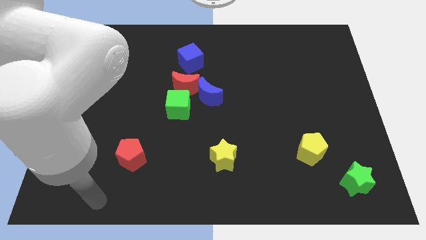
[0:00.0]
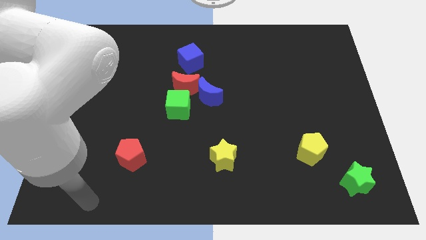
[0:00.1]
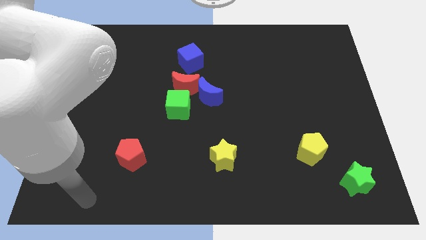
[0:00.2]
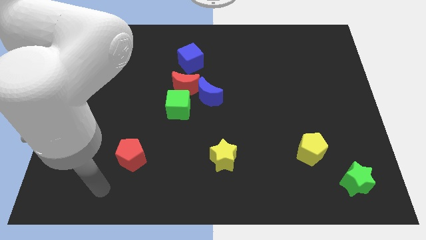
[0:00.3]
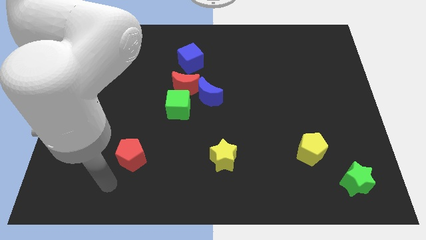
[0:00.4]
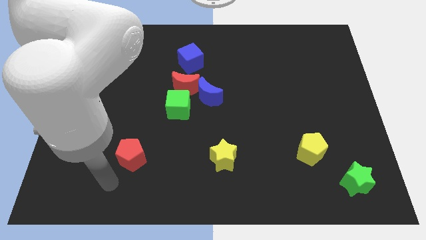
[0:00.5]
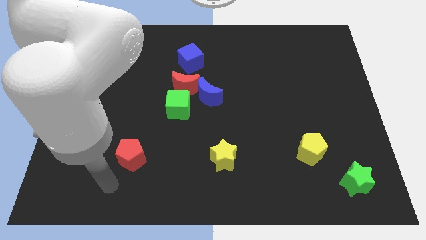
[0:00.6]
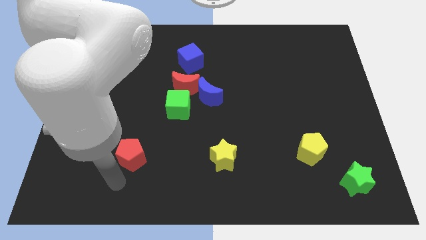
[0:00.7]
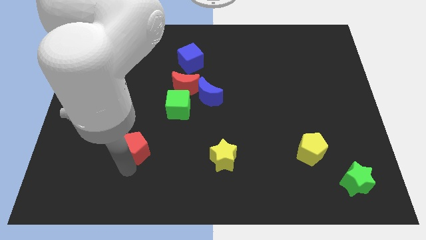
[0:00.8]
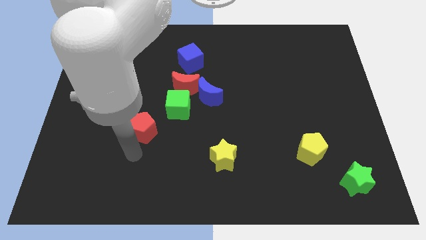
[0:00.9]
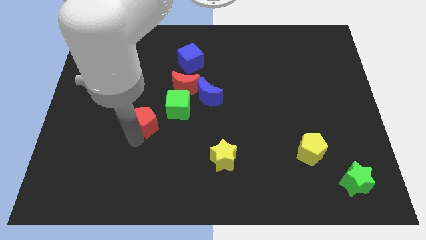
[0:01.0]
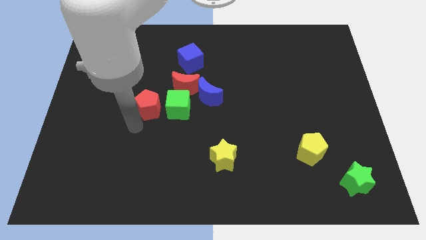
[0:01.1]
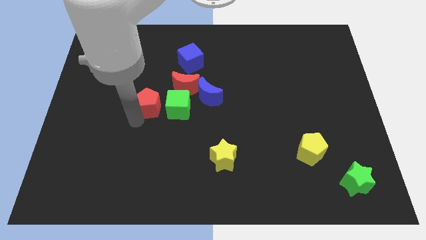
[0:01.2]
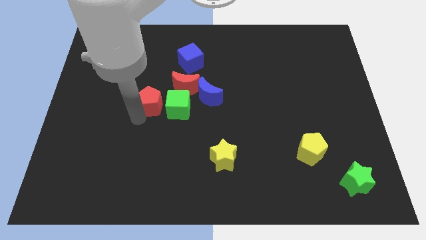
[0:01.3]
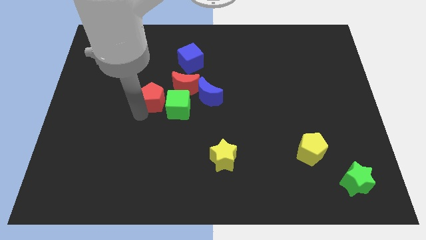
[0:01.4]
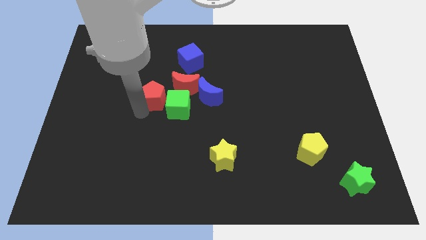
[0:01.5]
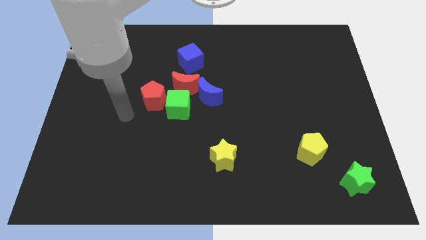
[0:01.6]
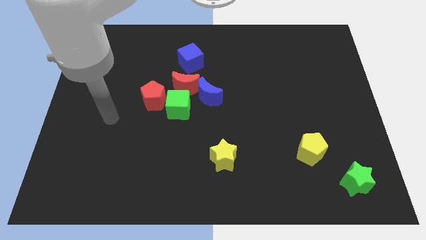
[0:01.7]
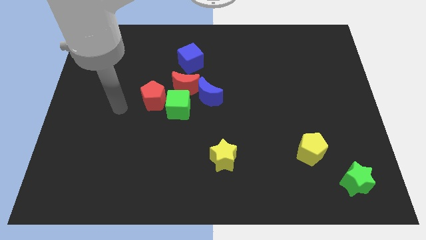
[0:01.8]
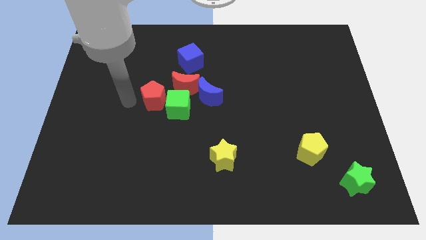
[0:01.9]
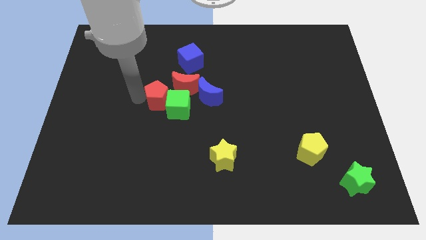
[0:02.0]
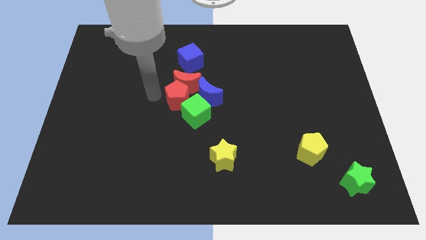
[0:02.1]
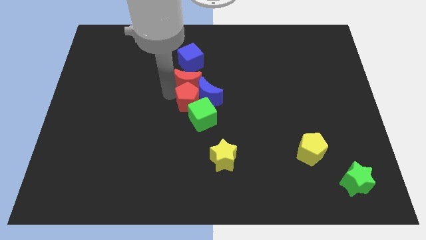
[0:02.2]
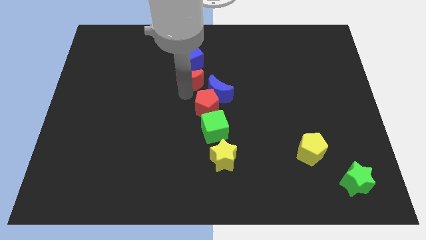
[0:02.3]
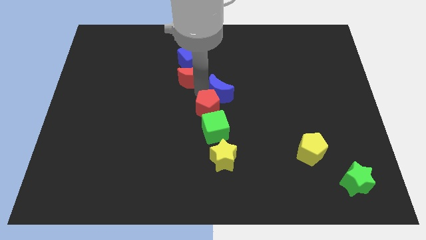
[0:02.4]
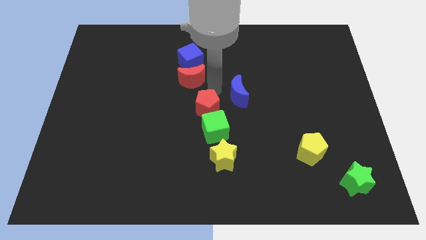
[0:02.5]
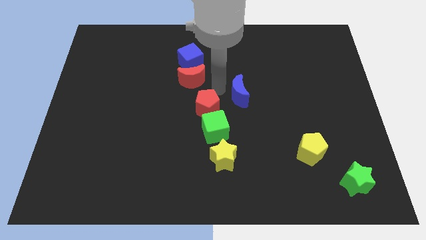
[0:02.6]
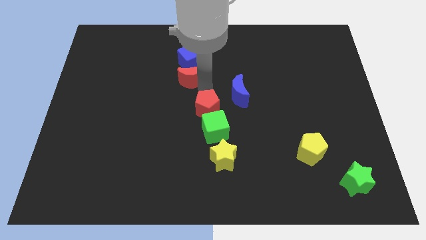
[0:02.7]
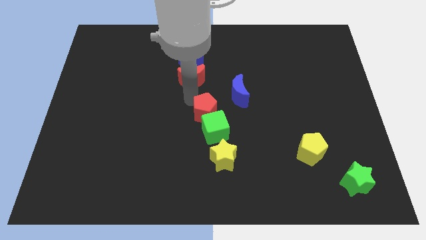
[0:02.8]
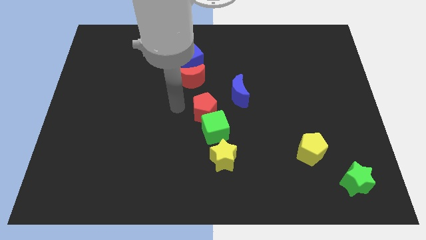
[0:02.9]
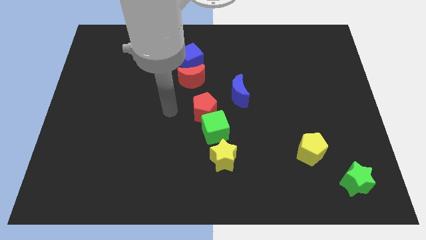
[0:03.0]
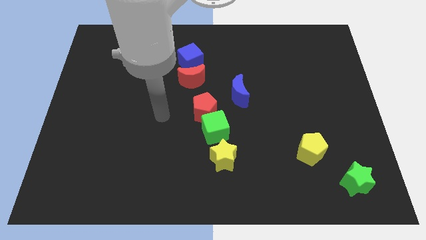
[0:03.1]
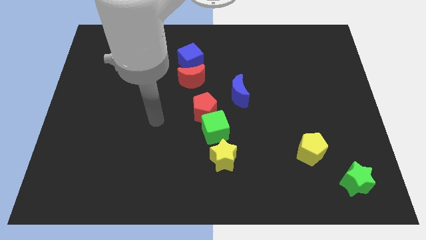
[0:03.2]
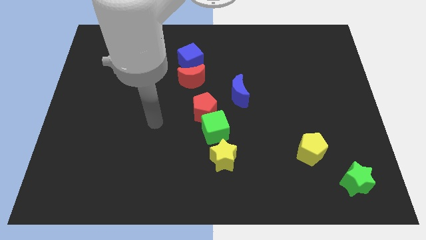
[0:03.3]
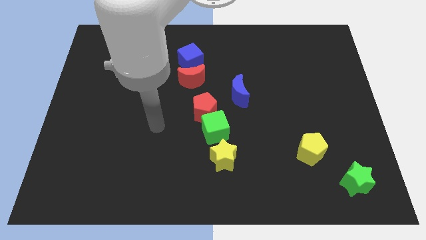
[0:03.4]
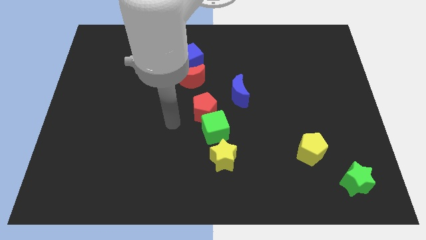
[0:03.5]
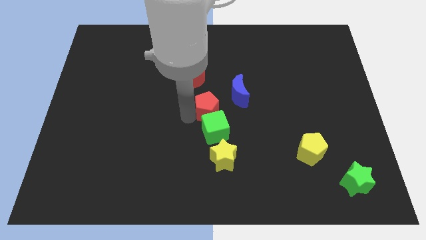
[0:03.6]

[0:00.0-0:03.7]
push the red pentagon to the top left side of the green cube

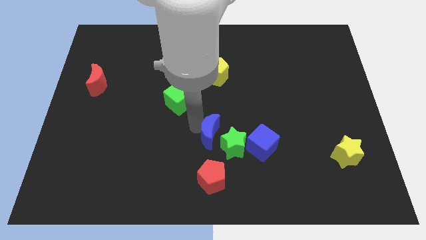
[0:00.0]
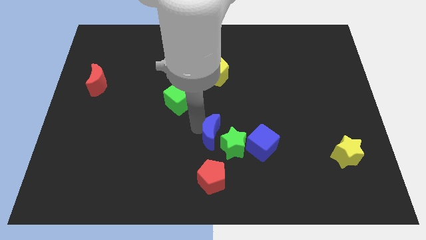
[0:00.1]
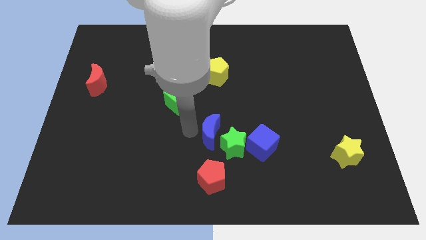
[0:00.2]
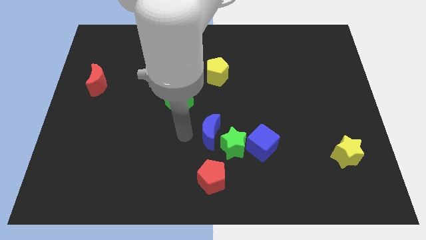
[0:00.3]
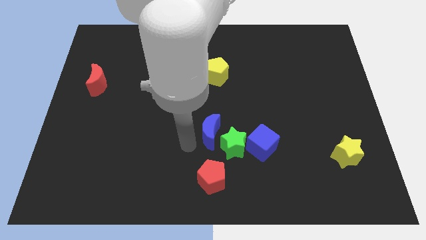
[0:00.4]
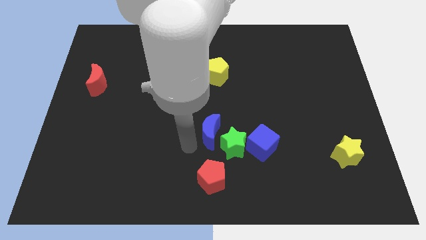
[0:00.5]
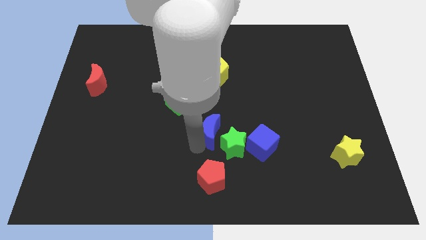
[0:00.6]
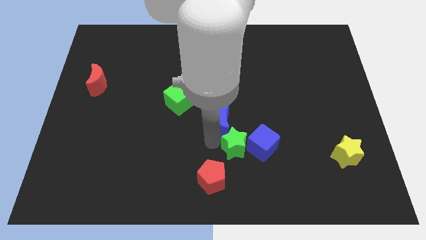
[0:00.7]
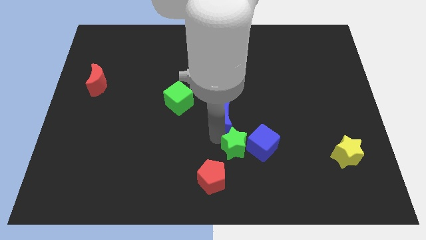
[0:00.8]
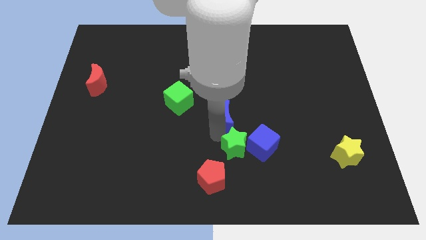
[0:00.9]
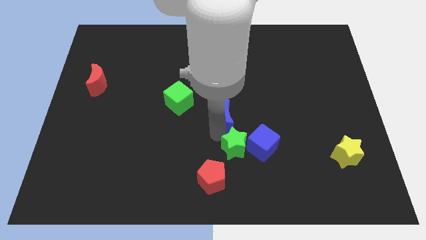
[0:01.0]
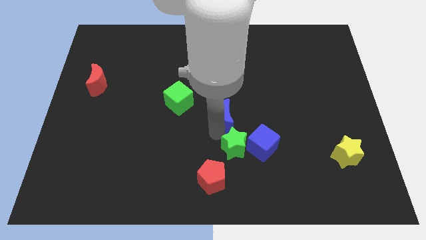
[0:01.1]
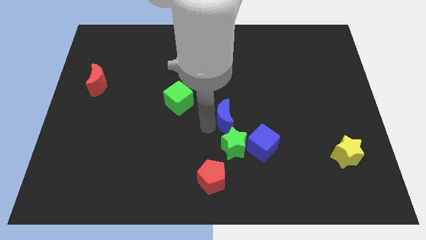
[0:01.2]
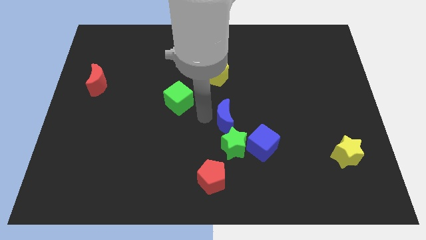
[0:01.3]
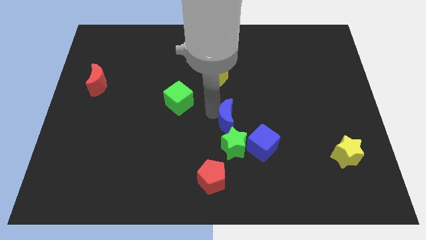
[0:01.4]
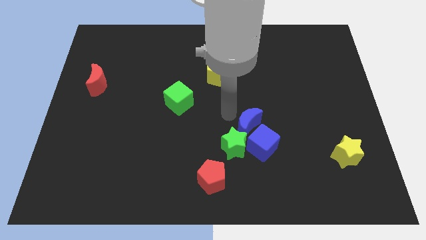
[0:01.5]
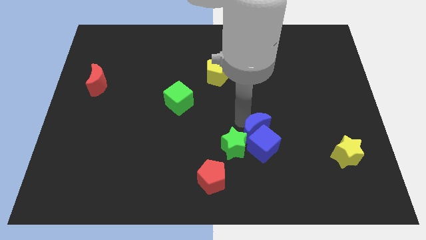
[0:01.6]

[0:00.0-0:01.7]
move the blue crescent towards the blue cube

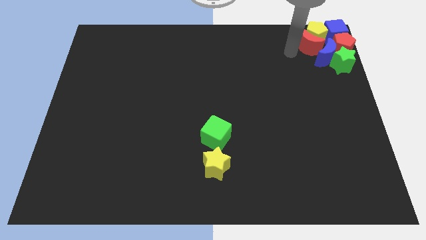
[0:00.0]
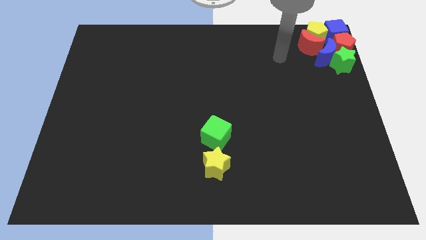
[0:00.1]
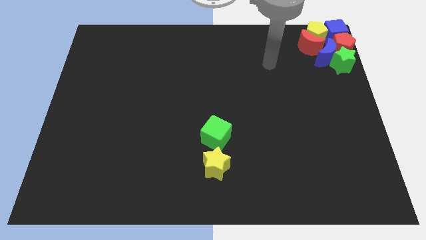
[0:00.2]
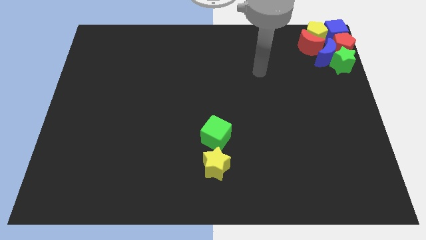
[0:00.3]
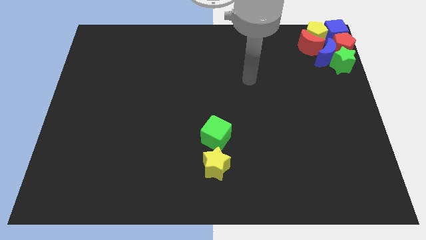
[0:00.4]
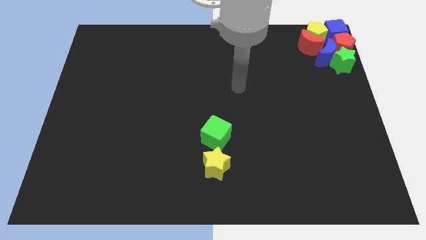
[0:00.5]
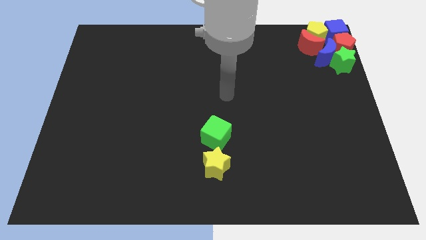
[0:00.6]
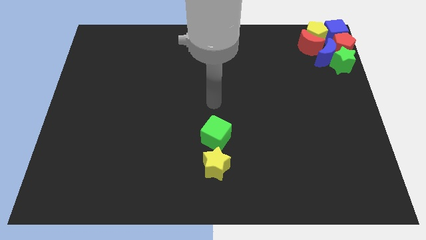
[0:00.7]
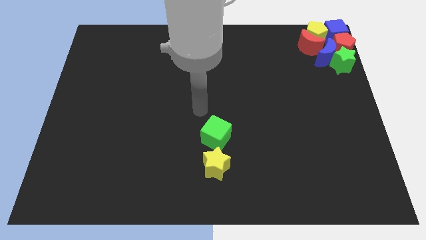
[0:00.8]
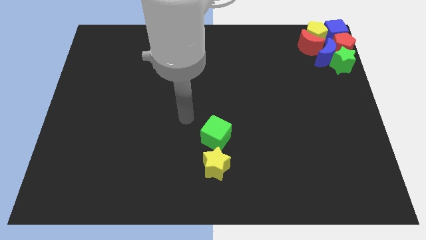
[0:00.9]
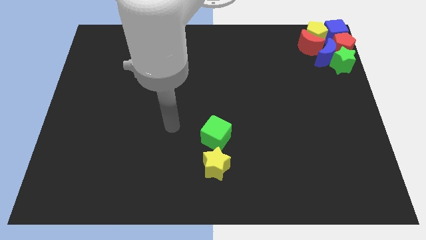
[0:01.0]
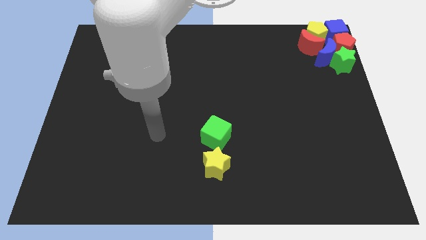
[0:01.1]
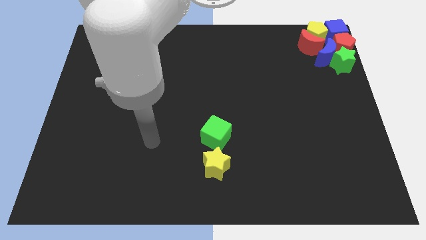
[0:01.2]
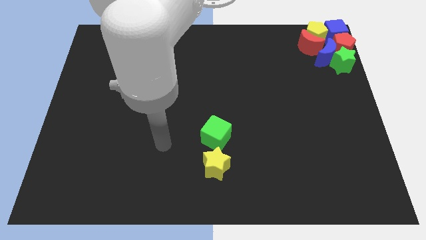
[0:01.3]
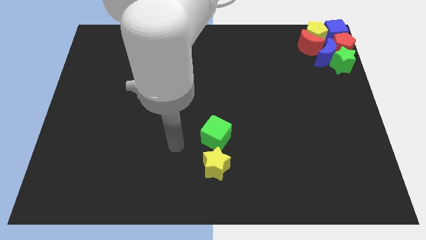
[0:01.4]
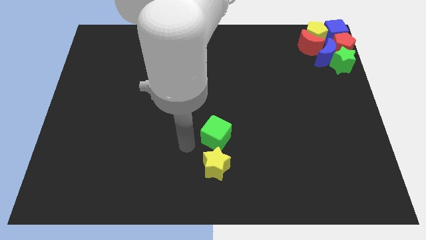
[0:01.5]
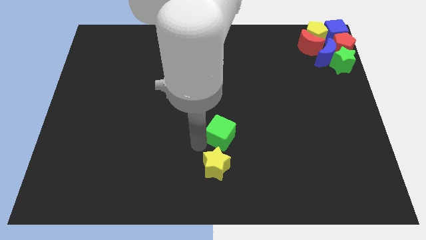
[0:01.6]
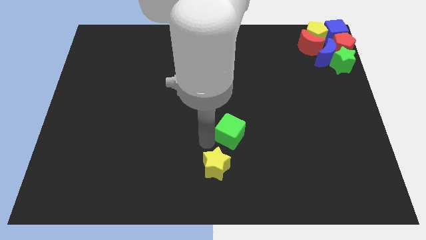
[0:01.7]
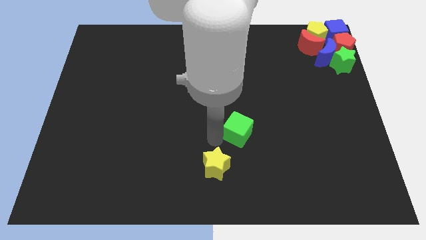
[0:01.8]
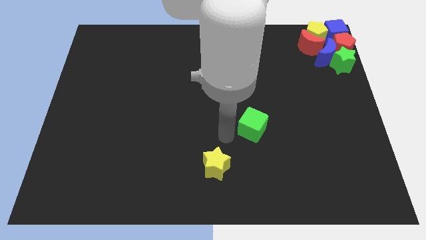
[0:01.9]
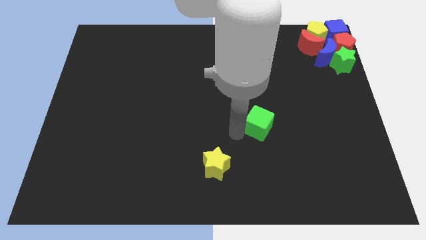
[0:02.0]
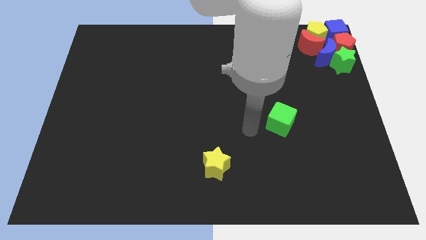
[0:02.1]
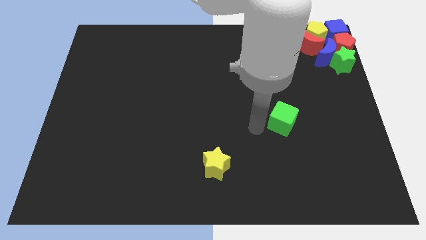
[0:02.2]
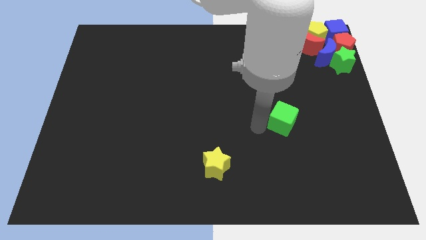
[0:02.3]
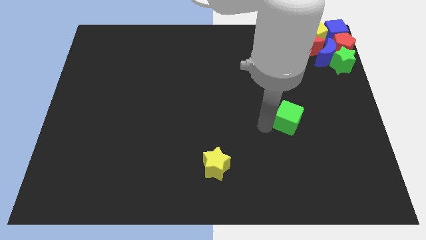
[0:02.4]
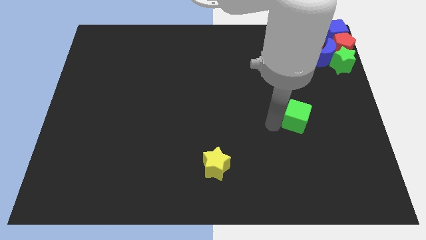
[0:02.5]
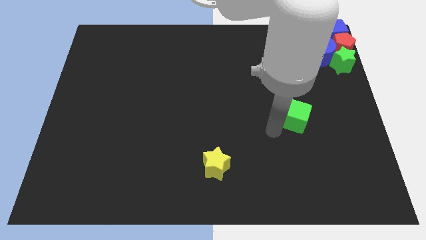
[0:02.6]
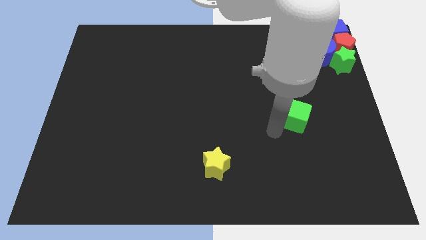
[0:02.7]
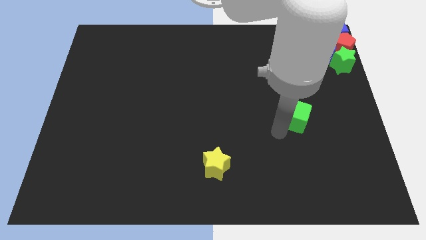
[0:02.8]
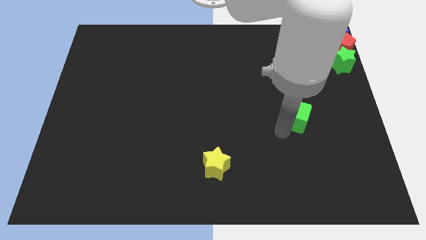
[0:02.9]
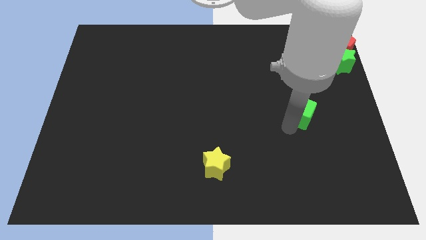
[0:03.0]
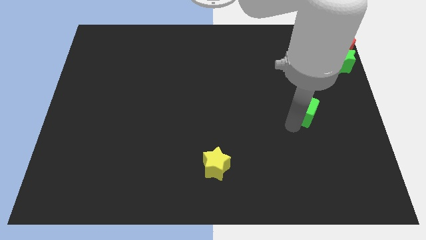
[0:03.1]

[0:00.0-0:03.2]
move the green cube away from the yellow star

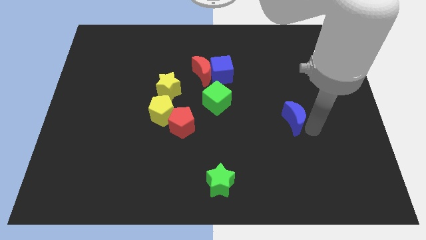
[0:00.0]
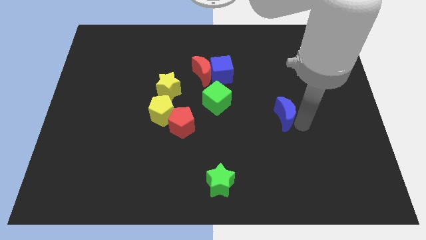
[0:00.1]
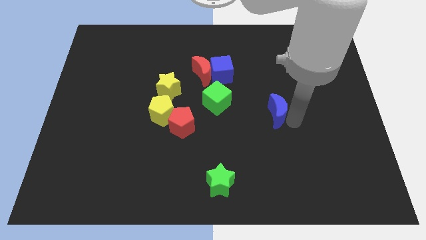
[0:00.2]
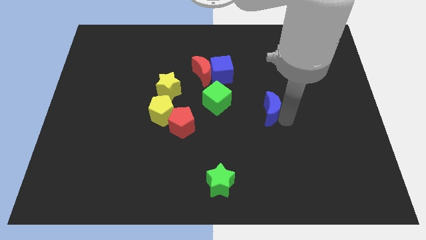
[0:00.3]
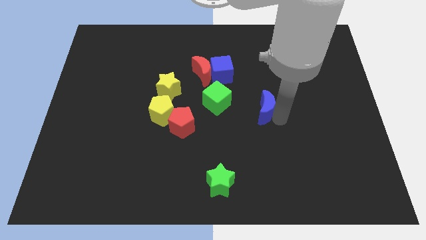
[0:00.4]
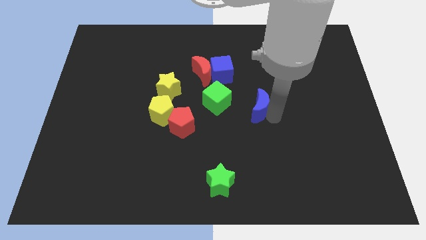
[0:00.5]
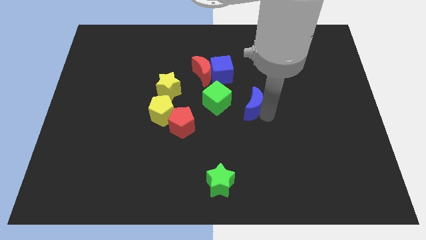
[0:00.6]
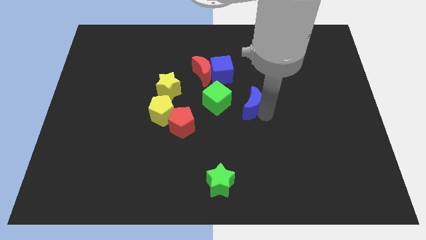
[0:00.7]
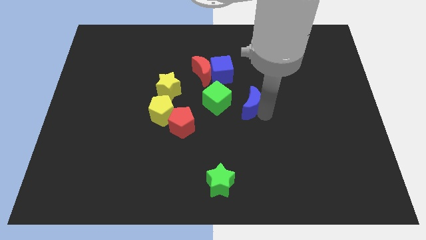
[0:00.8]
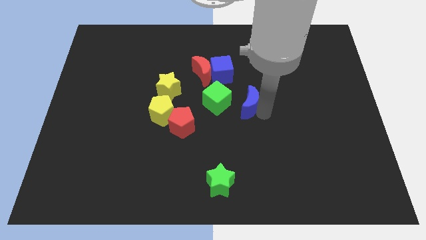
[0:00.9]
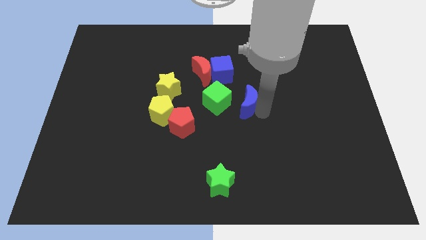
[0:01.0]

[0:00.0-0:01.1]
place the blue crescent to the right of the green cube
